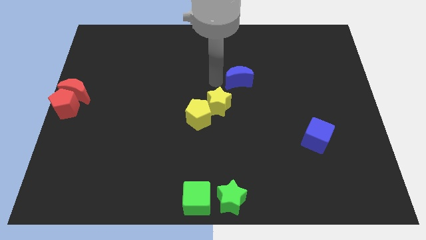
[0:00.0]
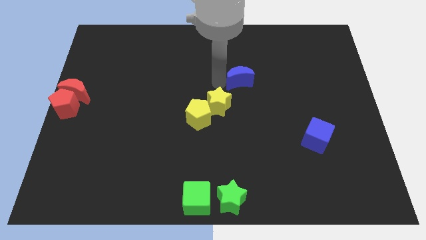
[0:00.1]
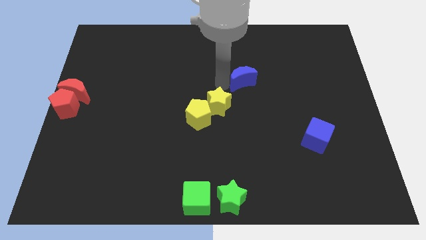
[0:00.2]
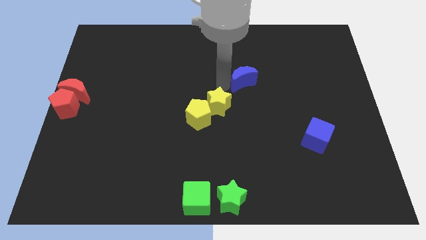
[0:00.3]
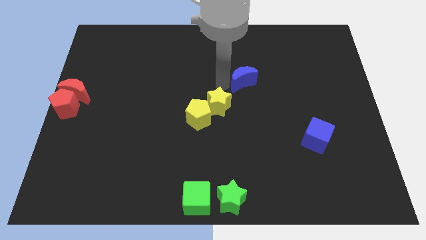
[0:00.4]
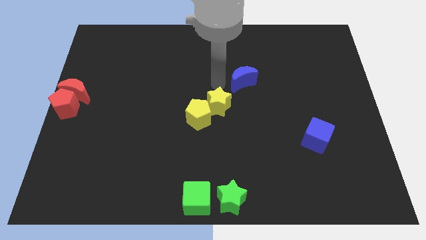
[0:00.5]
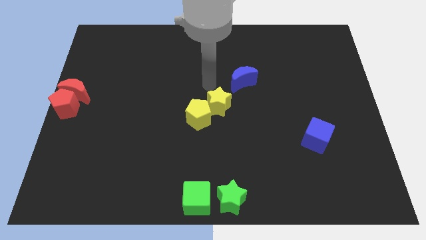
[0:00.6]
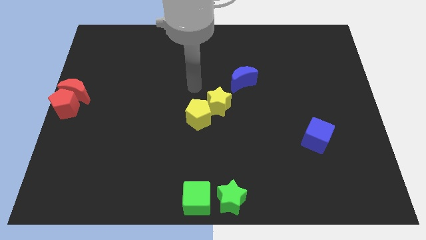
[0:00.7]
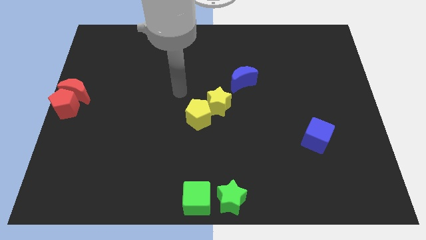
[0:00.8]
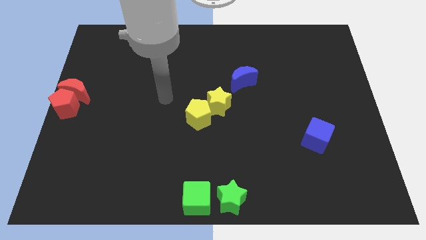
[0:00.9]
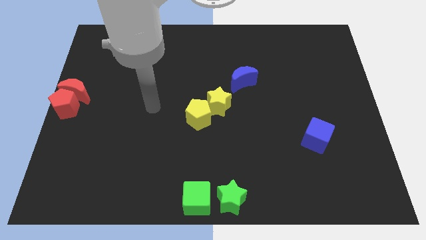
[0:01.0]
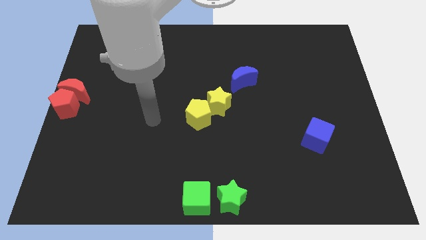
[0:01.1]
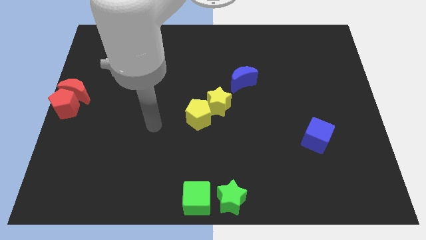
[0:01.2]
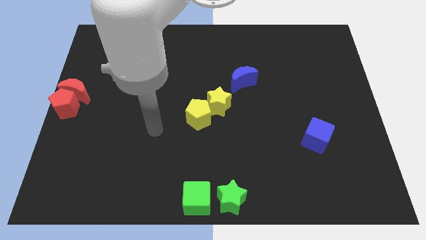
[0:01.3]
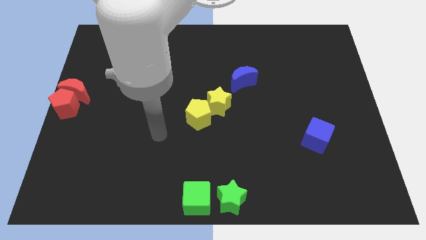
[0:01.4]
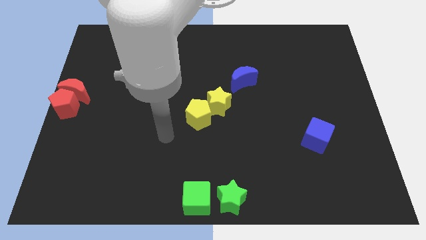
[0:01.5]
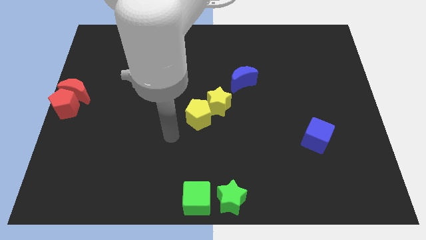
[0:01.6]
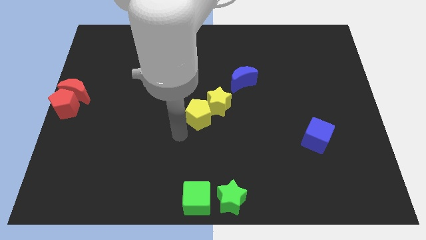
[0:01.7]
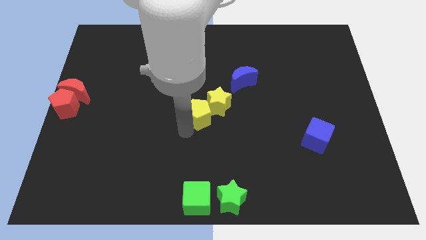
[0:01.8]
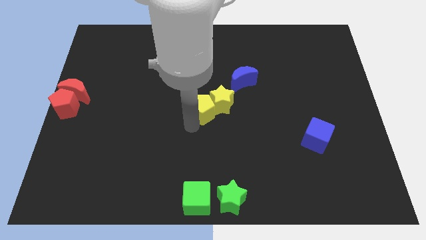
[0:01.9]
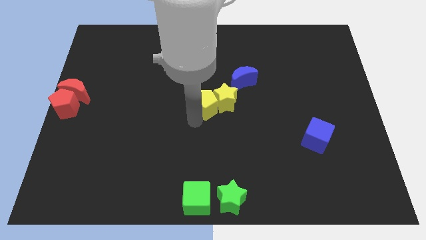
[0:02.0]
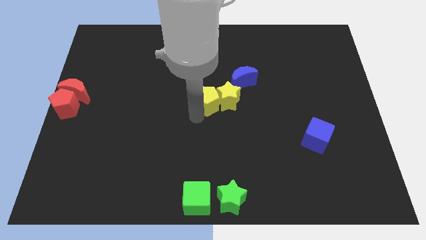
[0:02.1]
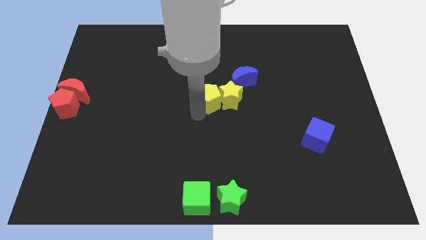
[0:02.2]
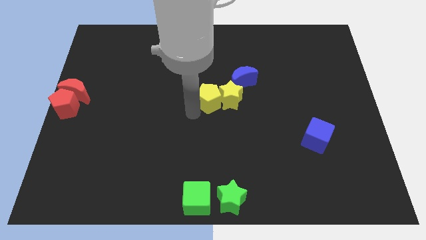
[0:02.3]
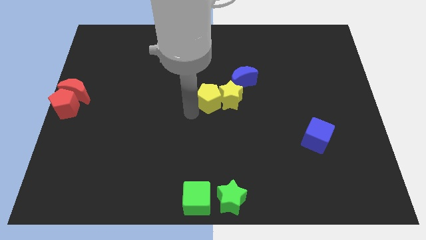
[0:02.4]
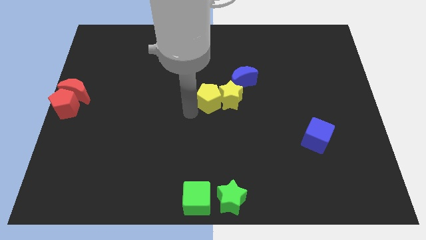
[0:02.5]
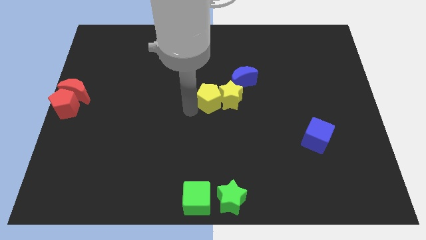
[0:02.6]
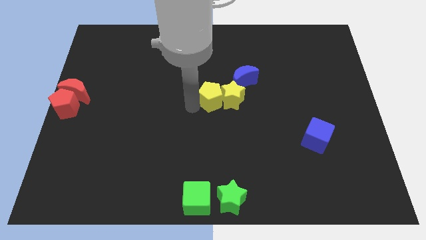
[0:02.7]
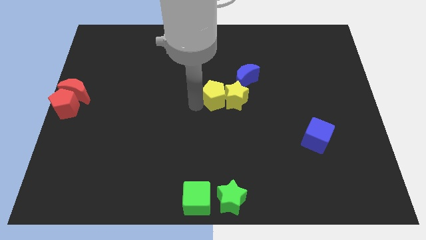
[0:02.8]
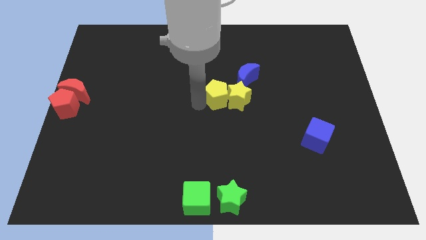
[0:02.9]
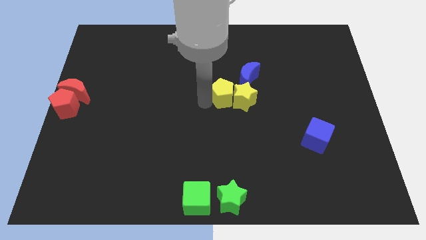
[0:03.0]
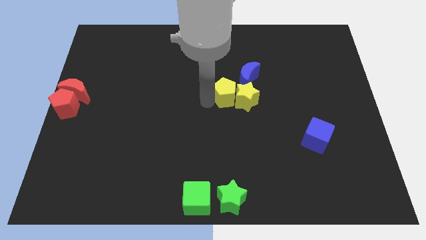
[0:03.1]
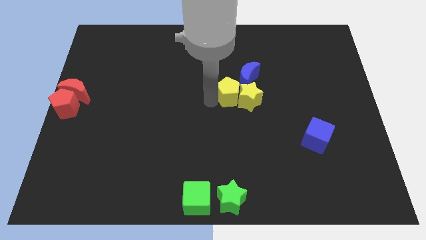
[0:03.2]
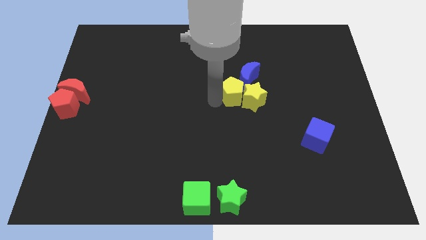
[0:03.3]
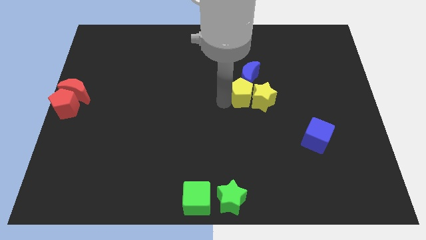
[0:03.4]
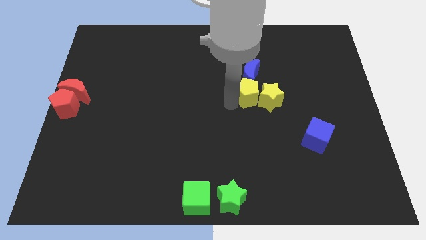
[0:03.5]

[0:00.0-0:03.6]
move yellow blocks towards the right center

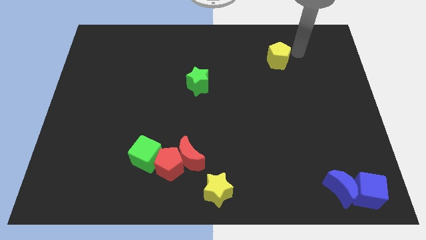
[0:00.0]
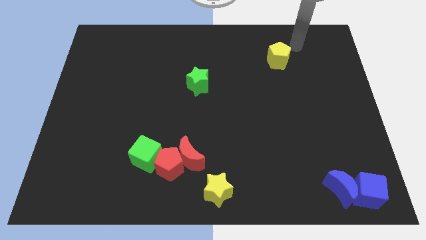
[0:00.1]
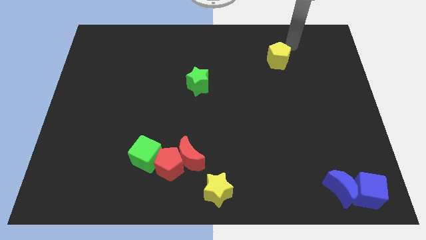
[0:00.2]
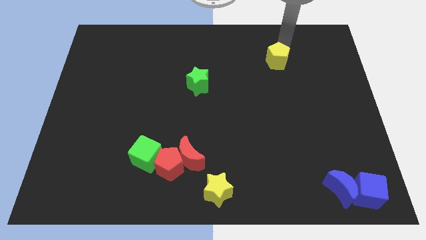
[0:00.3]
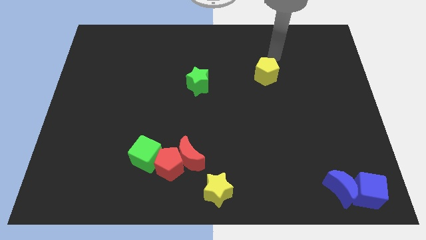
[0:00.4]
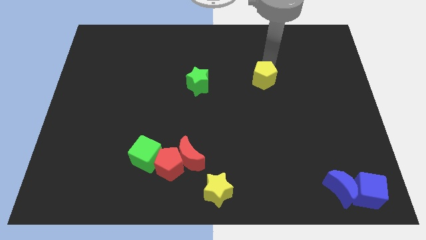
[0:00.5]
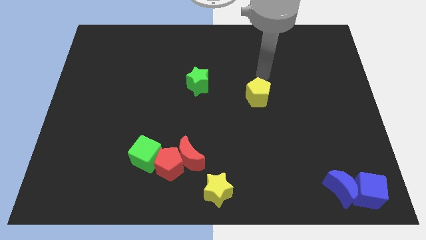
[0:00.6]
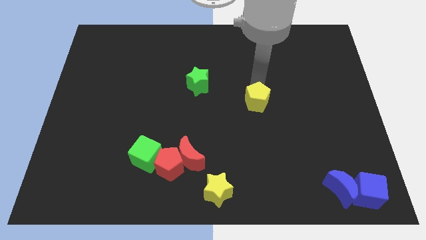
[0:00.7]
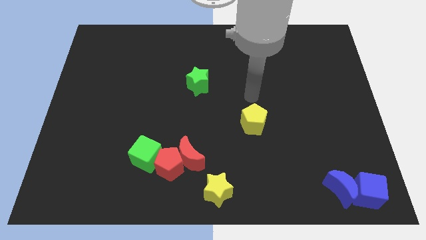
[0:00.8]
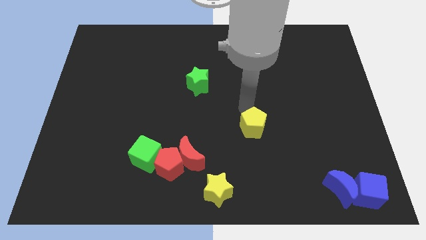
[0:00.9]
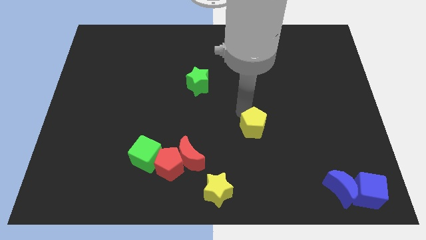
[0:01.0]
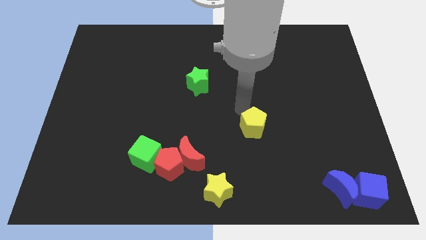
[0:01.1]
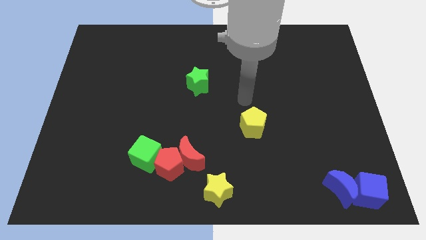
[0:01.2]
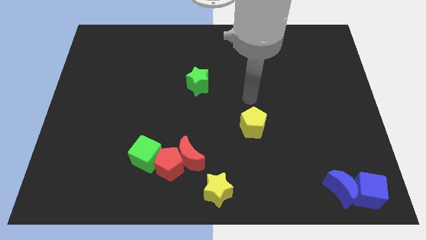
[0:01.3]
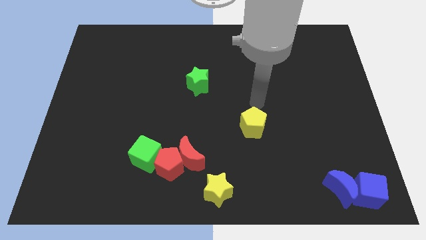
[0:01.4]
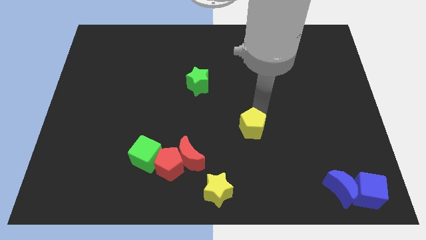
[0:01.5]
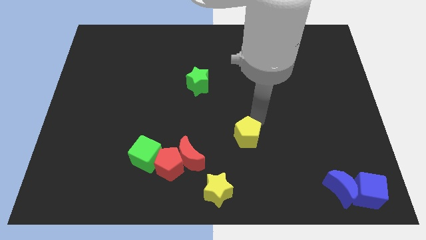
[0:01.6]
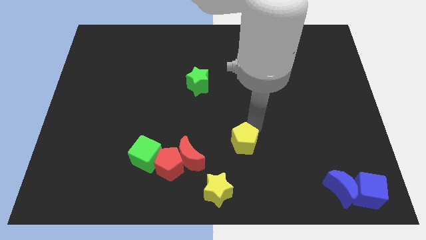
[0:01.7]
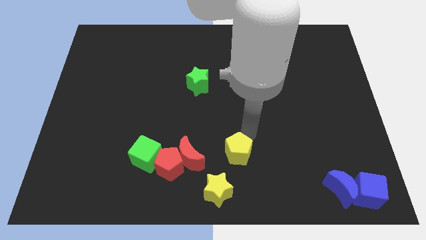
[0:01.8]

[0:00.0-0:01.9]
place the yellow pentagon above the yellow star

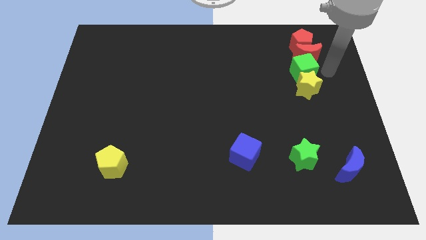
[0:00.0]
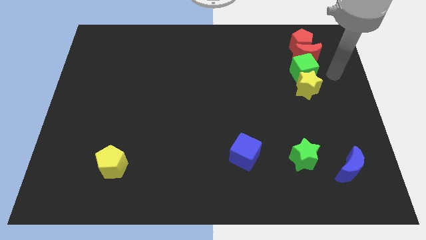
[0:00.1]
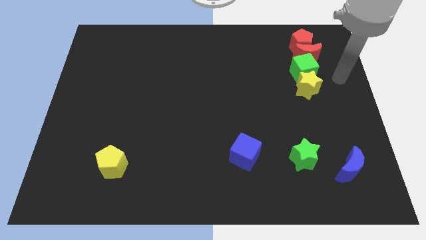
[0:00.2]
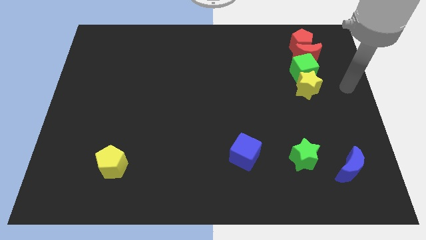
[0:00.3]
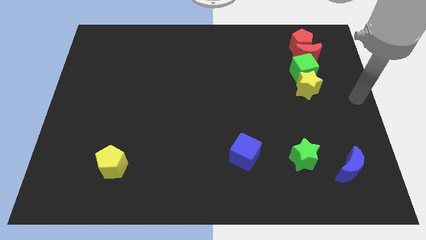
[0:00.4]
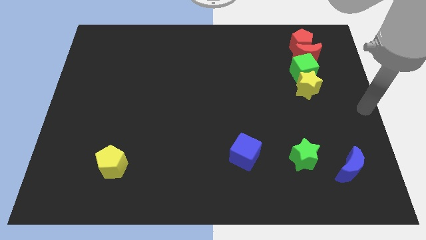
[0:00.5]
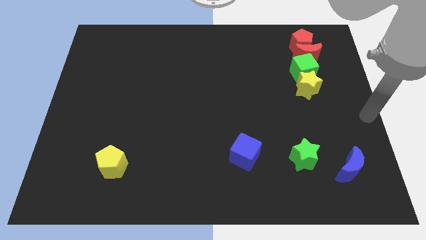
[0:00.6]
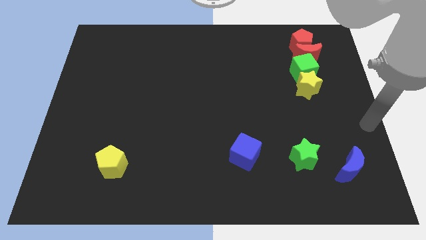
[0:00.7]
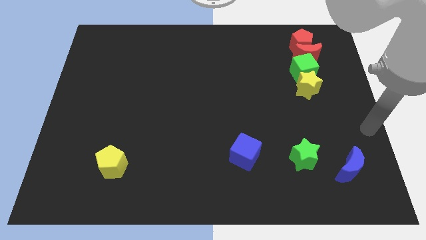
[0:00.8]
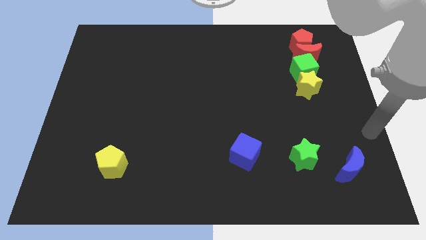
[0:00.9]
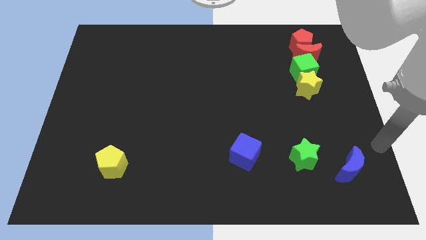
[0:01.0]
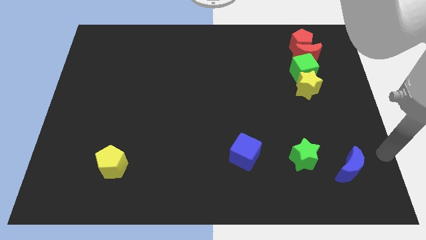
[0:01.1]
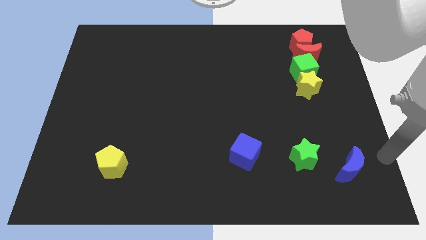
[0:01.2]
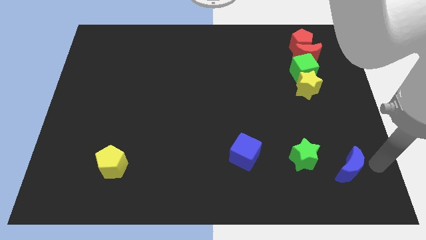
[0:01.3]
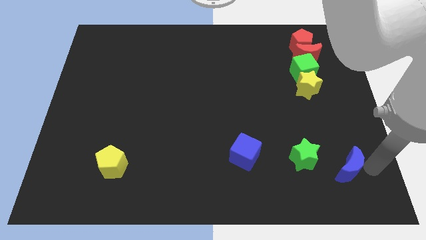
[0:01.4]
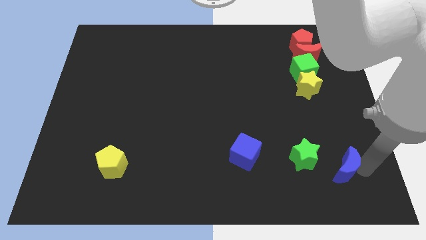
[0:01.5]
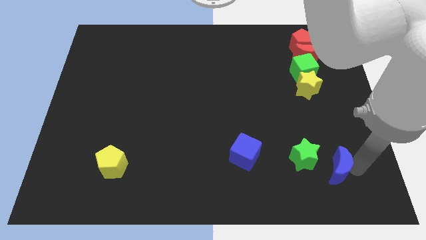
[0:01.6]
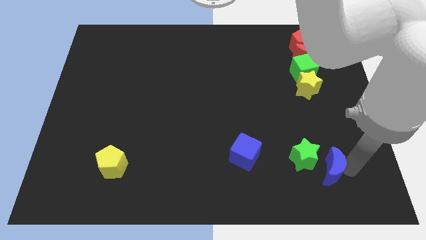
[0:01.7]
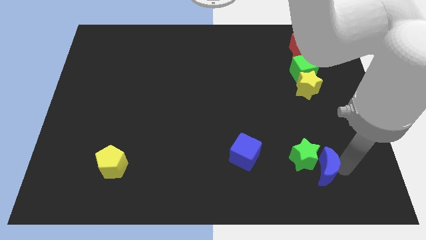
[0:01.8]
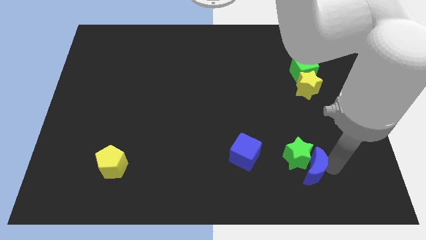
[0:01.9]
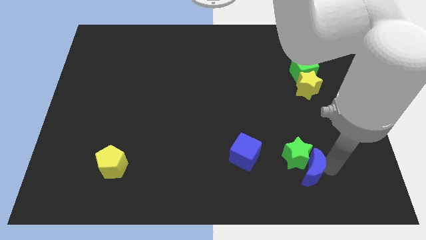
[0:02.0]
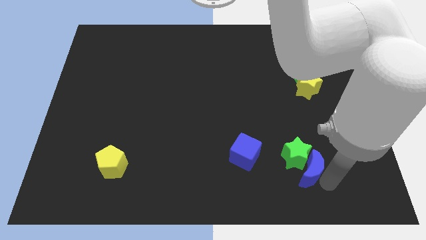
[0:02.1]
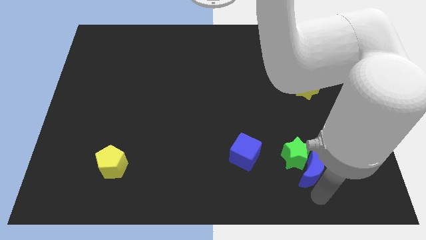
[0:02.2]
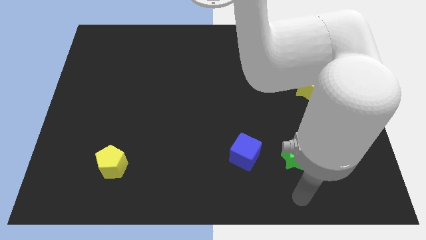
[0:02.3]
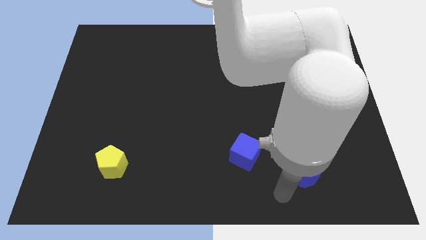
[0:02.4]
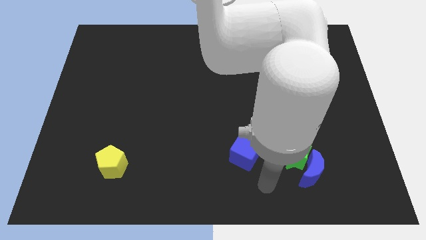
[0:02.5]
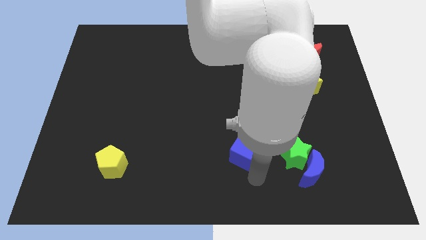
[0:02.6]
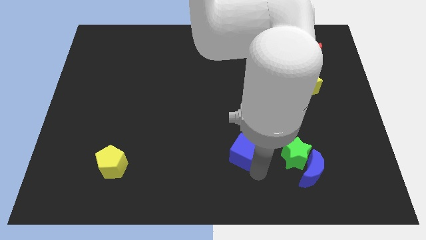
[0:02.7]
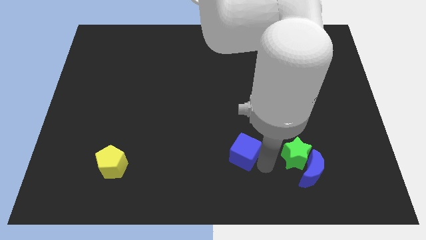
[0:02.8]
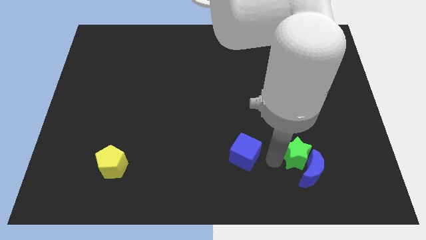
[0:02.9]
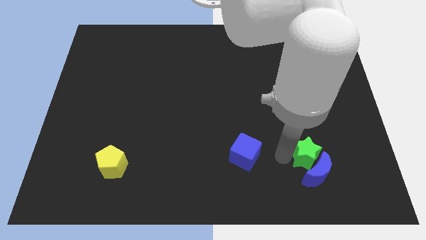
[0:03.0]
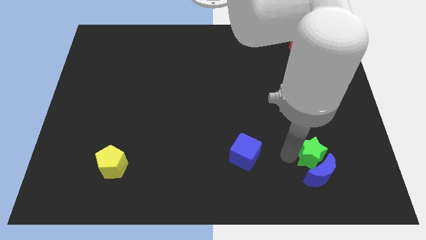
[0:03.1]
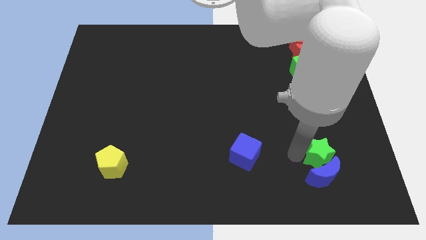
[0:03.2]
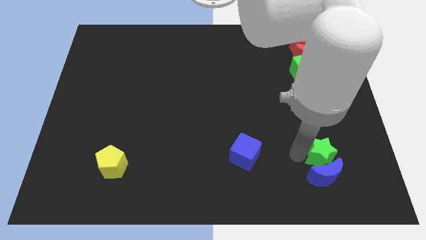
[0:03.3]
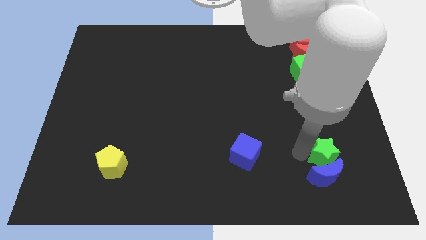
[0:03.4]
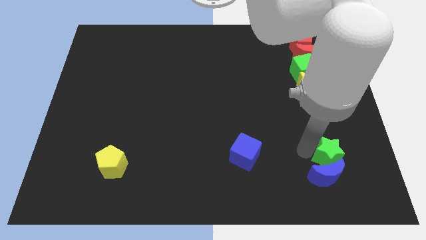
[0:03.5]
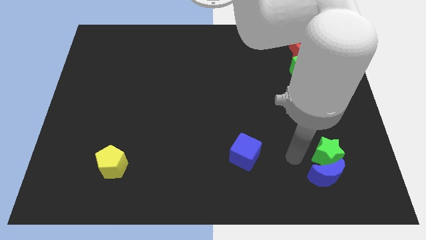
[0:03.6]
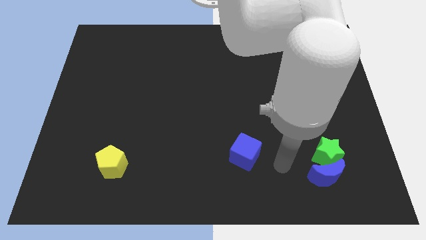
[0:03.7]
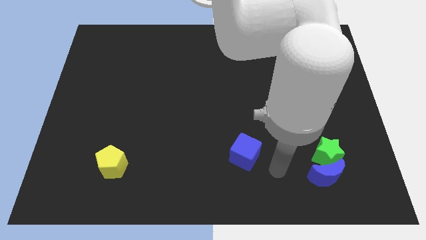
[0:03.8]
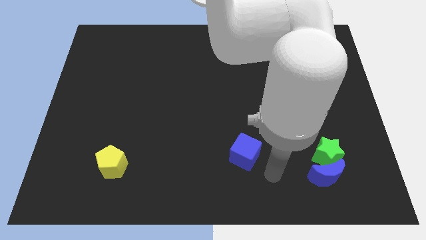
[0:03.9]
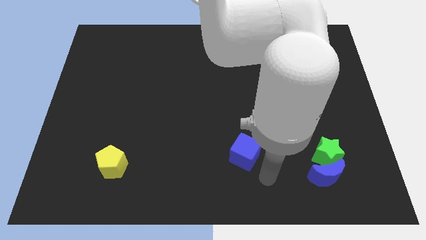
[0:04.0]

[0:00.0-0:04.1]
place the green star above the blue moon
